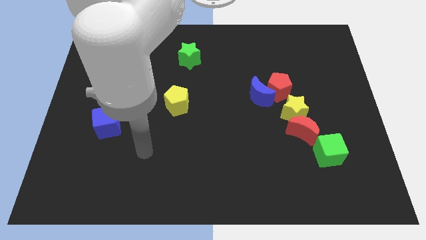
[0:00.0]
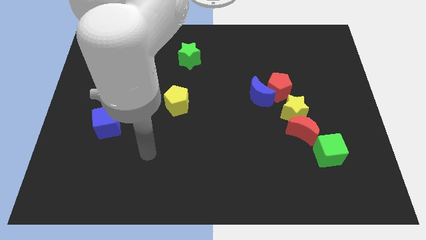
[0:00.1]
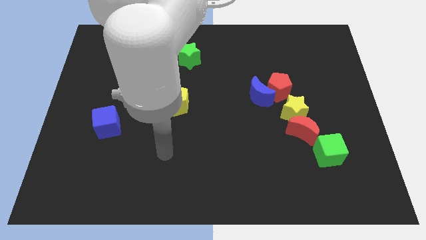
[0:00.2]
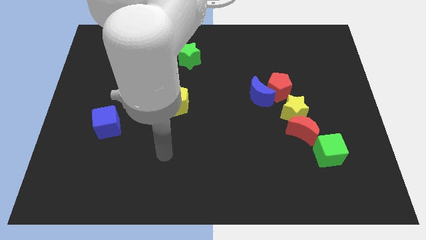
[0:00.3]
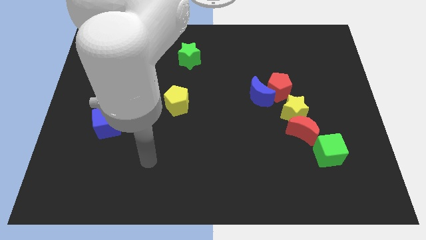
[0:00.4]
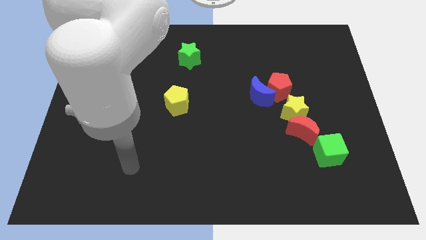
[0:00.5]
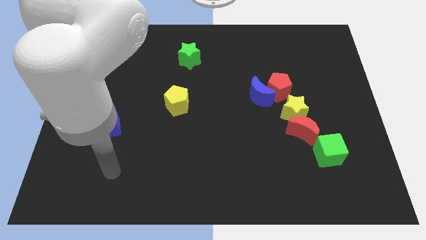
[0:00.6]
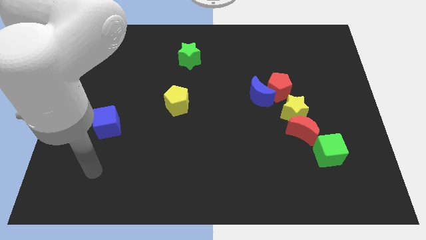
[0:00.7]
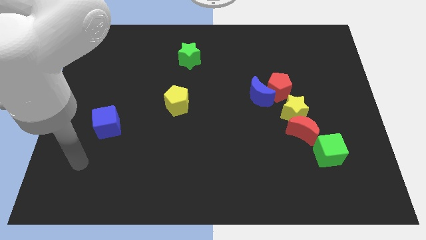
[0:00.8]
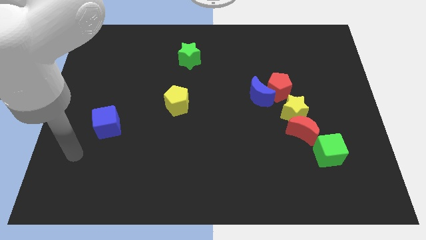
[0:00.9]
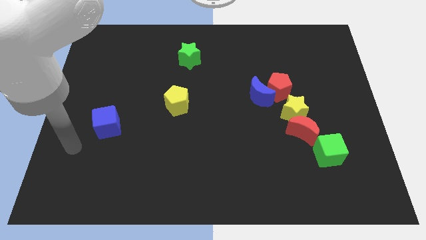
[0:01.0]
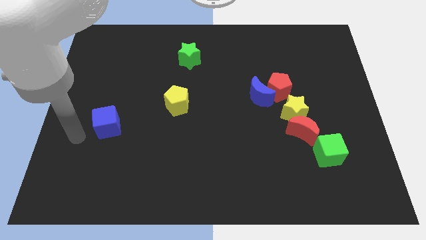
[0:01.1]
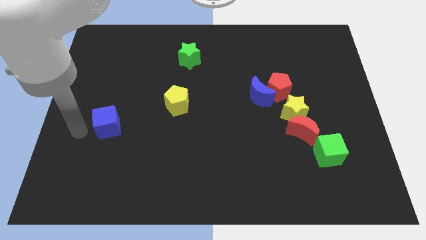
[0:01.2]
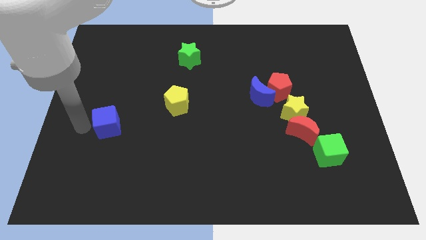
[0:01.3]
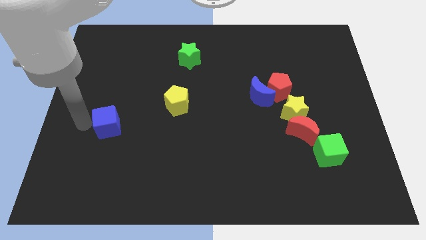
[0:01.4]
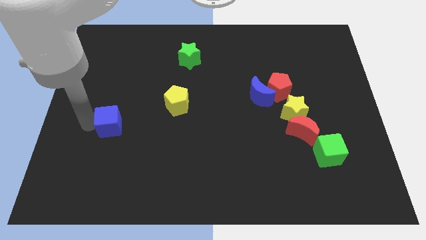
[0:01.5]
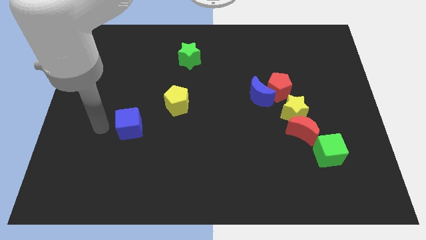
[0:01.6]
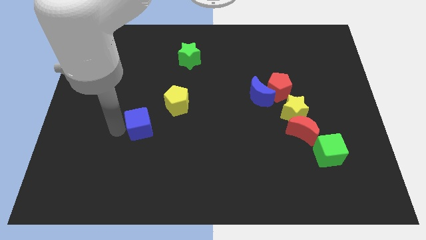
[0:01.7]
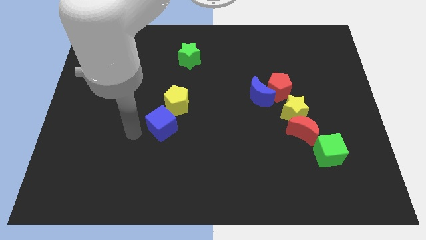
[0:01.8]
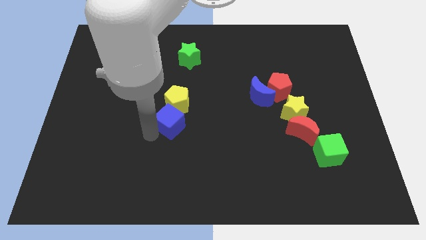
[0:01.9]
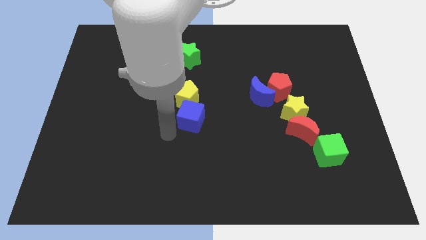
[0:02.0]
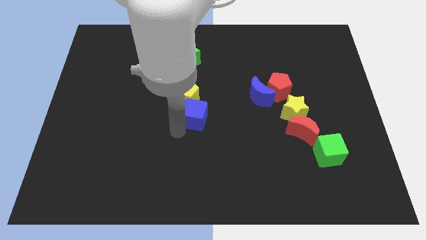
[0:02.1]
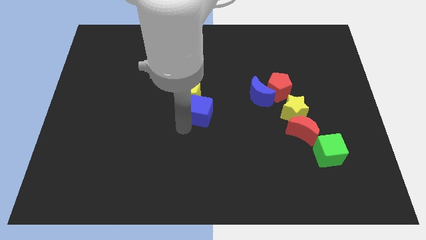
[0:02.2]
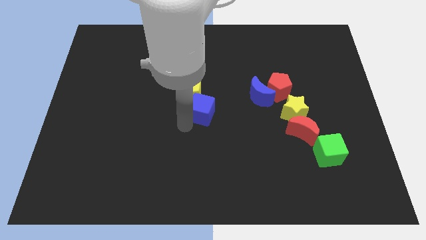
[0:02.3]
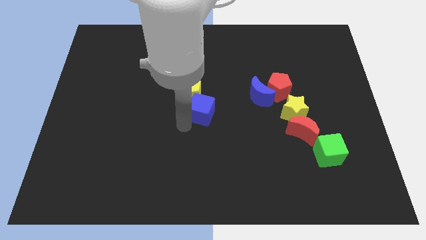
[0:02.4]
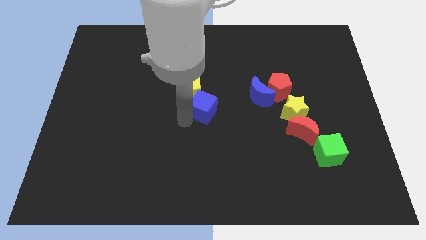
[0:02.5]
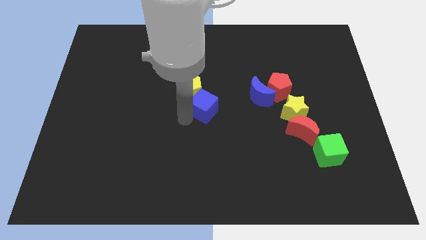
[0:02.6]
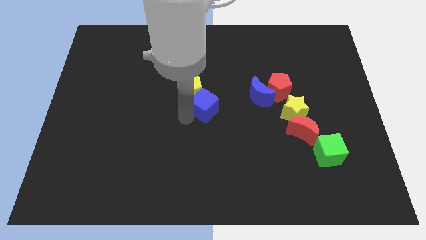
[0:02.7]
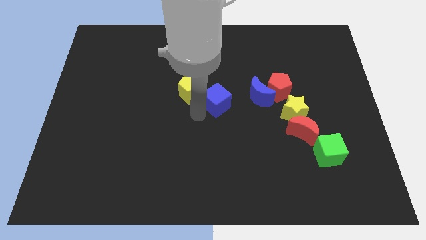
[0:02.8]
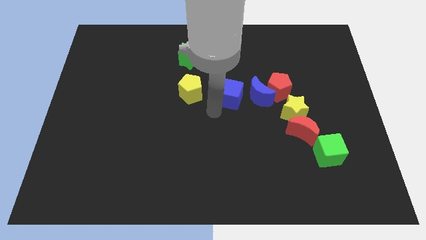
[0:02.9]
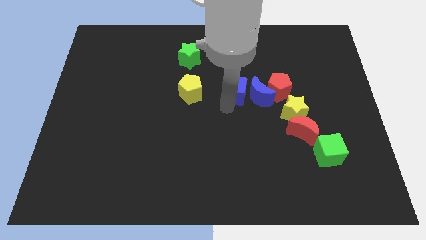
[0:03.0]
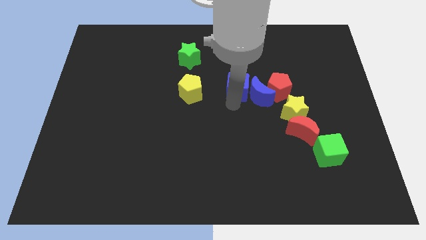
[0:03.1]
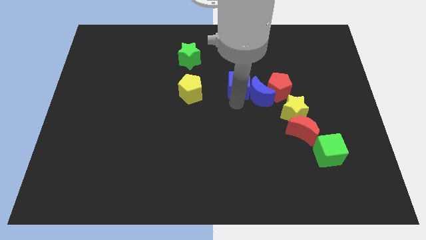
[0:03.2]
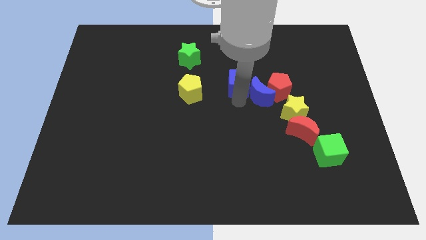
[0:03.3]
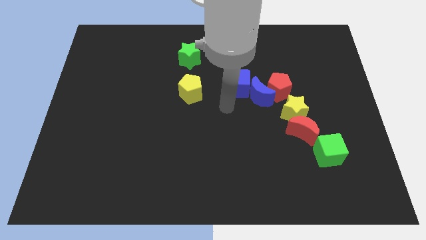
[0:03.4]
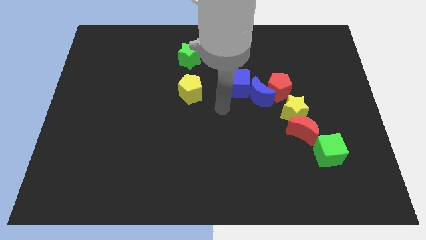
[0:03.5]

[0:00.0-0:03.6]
put the blue cube left to the blue moon

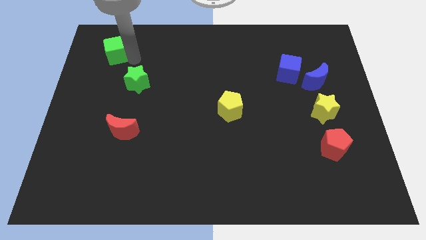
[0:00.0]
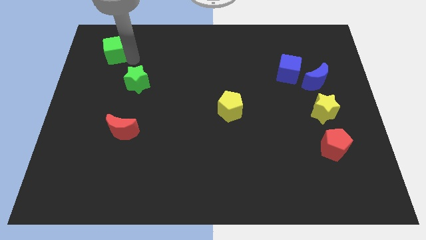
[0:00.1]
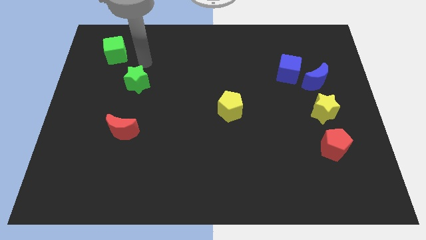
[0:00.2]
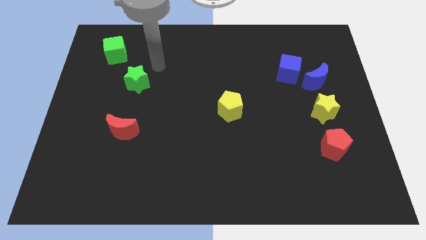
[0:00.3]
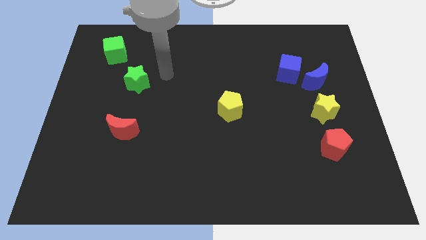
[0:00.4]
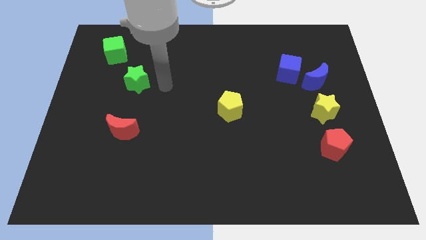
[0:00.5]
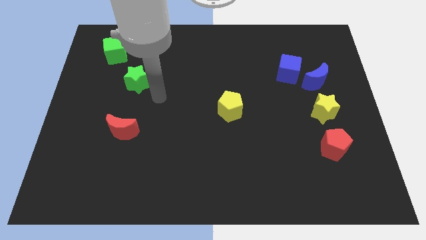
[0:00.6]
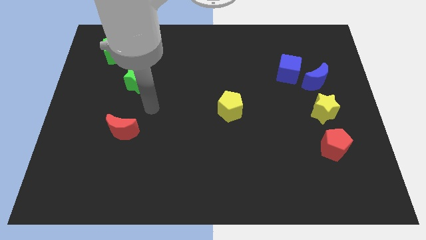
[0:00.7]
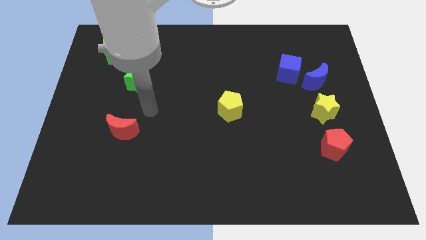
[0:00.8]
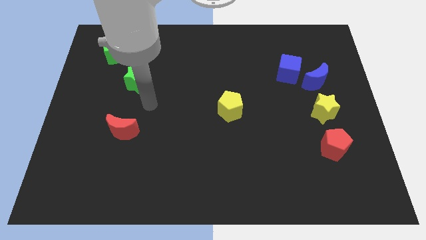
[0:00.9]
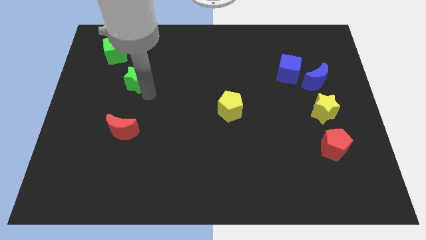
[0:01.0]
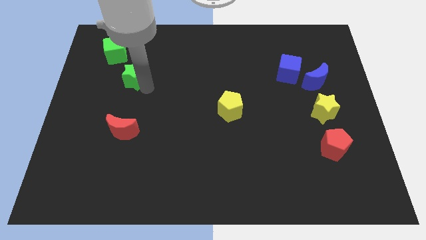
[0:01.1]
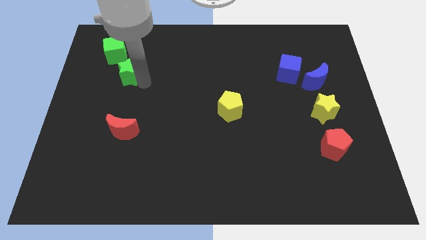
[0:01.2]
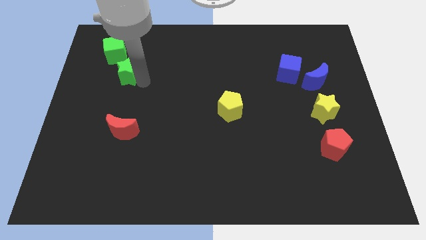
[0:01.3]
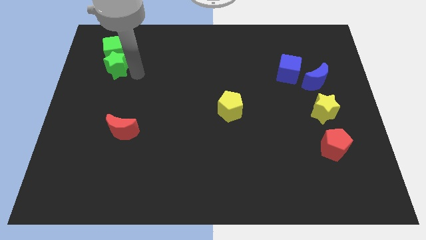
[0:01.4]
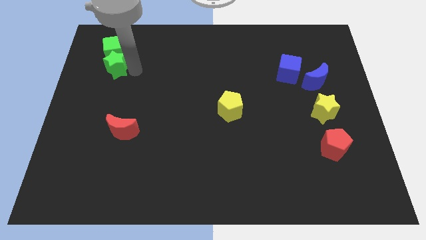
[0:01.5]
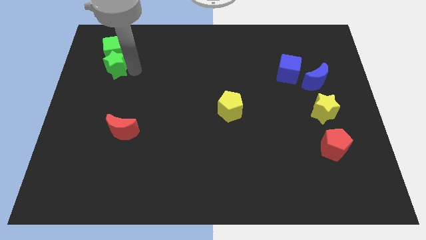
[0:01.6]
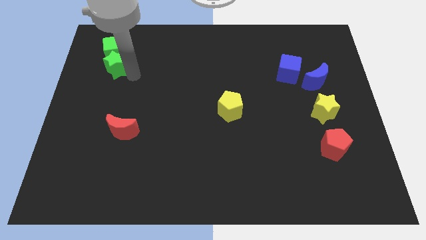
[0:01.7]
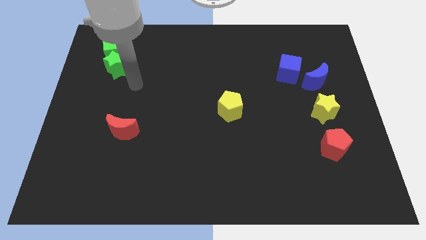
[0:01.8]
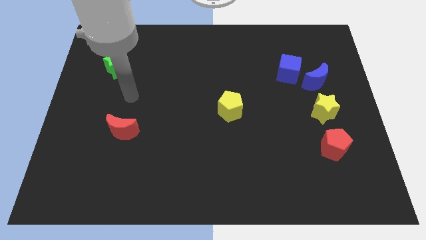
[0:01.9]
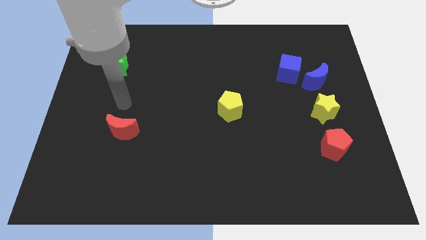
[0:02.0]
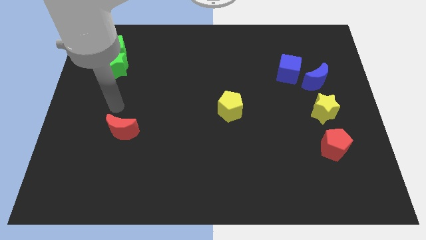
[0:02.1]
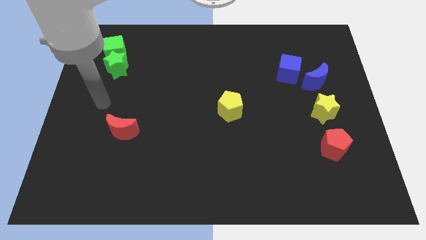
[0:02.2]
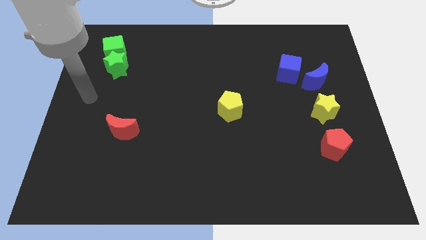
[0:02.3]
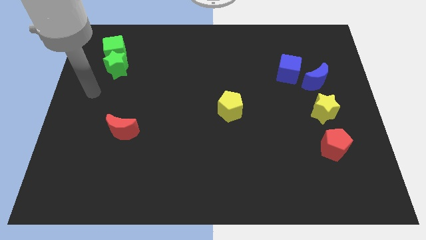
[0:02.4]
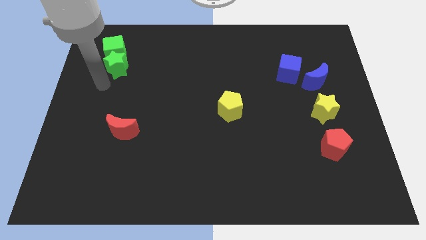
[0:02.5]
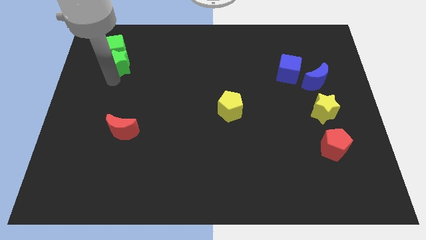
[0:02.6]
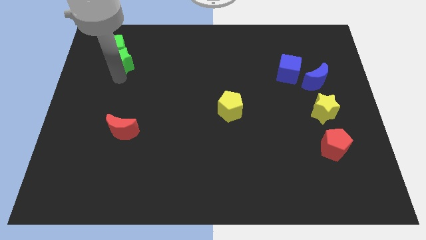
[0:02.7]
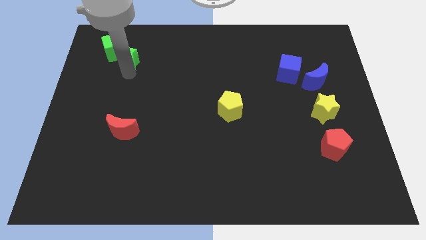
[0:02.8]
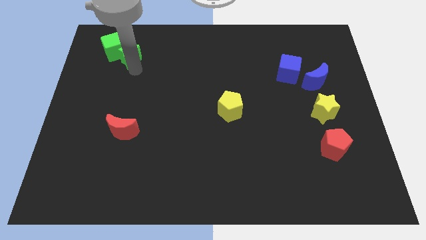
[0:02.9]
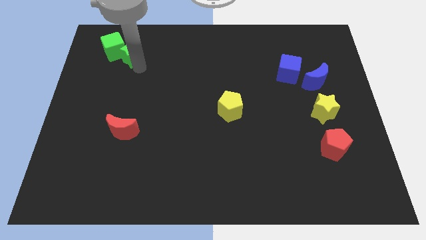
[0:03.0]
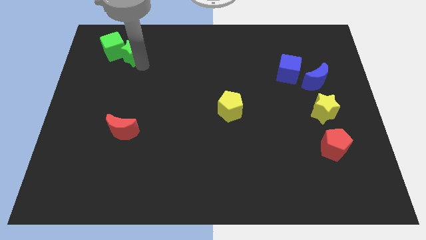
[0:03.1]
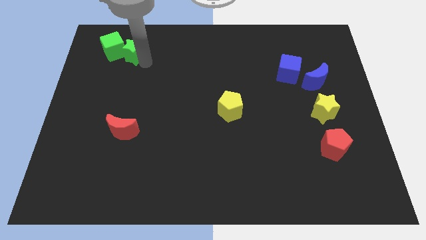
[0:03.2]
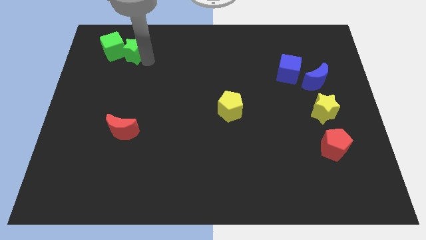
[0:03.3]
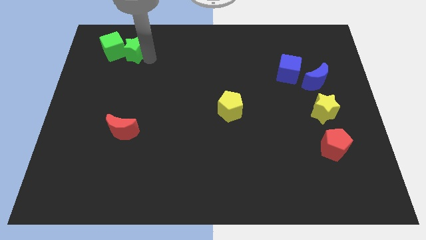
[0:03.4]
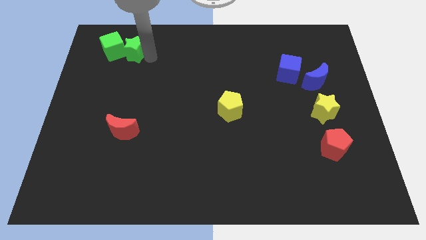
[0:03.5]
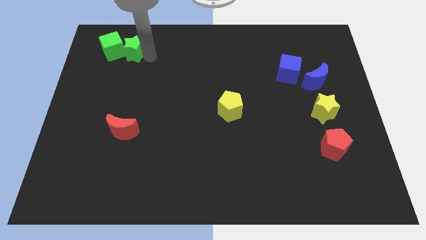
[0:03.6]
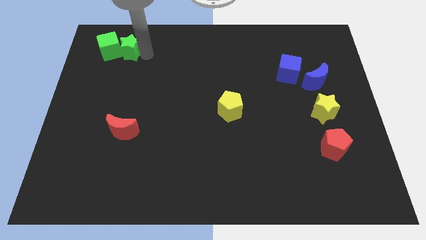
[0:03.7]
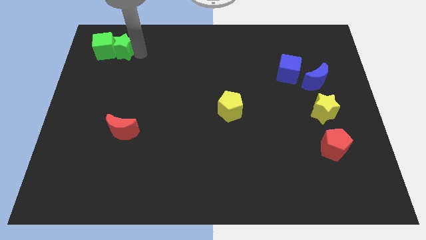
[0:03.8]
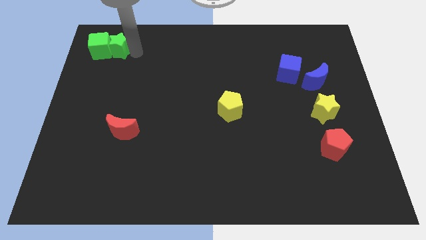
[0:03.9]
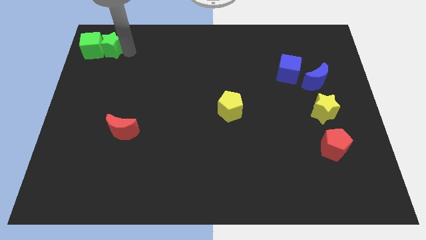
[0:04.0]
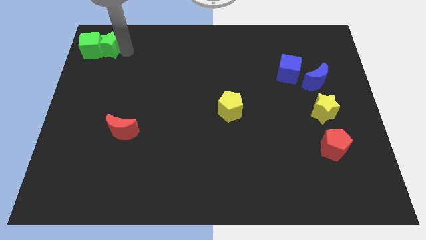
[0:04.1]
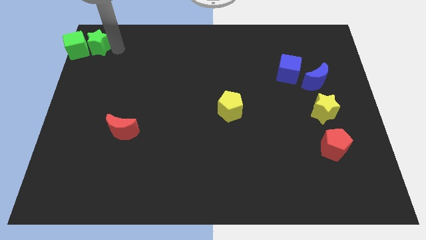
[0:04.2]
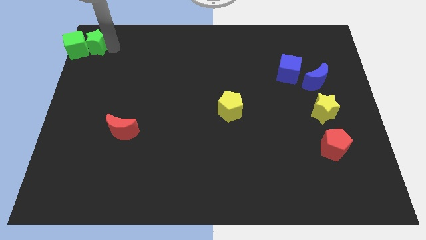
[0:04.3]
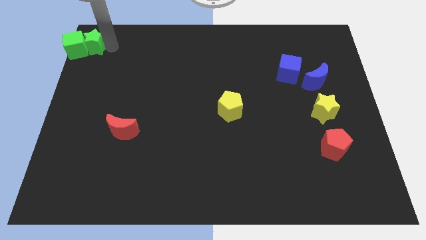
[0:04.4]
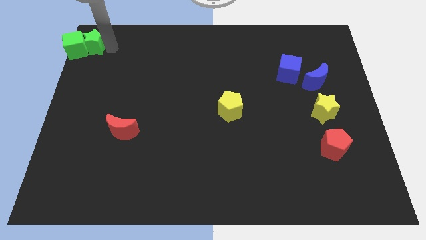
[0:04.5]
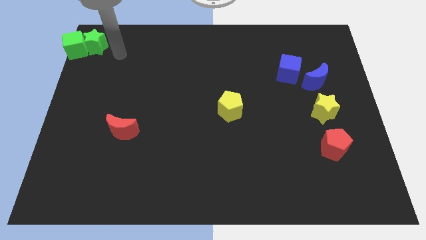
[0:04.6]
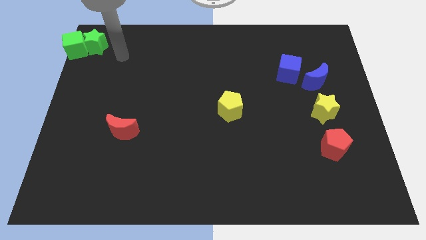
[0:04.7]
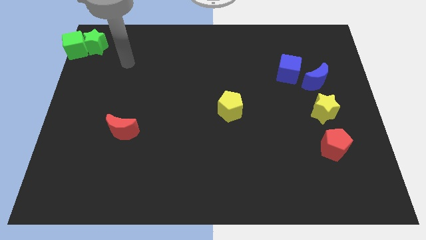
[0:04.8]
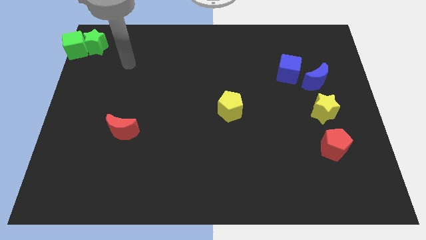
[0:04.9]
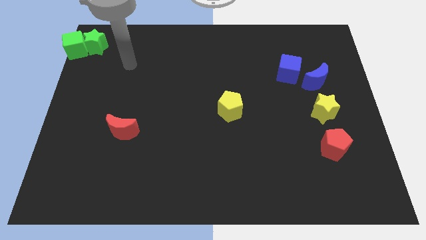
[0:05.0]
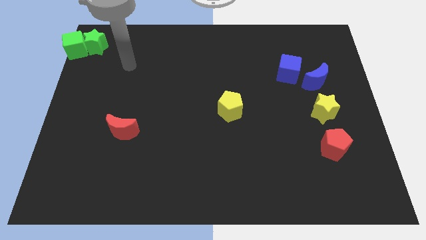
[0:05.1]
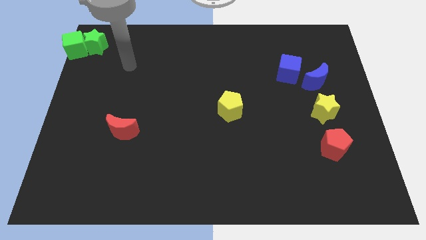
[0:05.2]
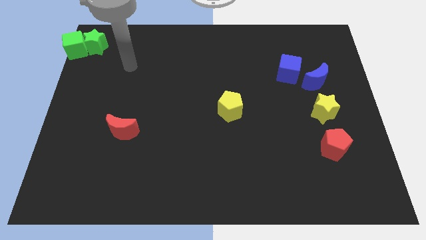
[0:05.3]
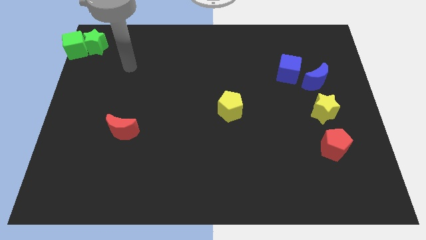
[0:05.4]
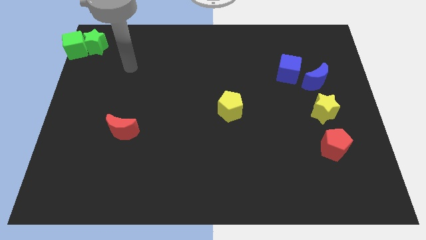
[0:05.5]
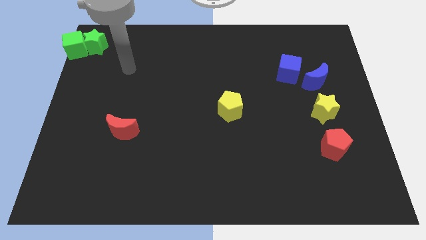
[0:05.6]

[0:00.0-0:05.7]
place the green blocks at the top left corner of the board
